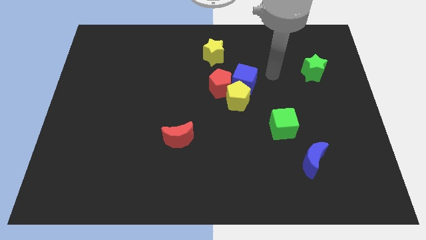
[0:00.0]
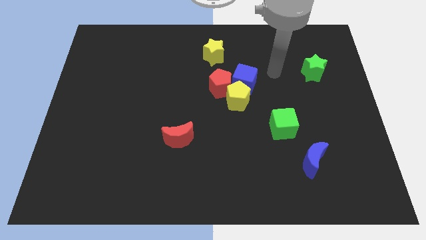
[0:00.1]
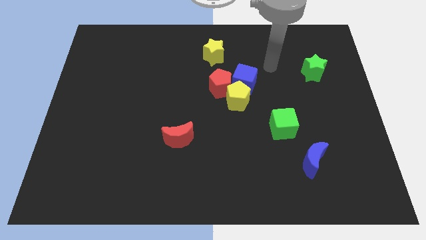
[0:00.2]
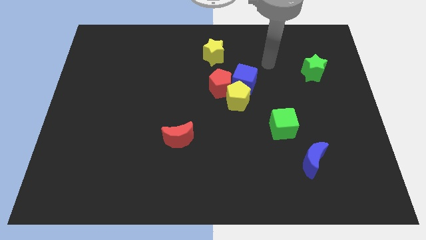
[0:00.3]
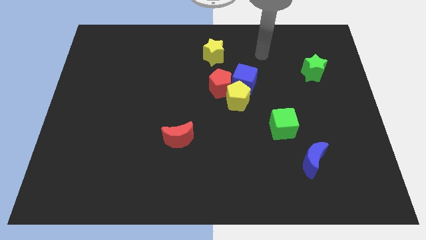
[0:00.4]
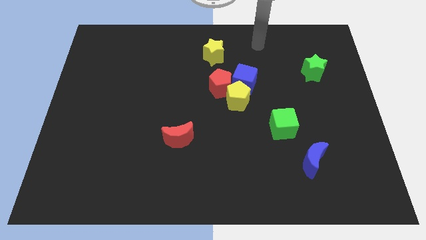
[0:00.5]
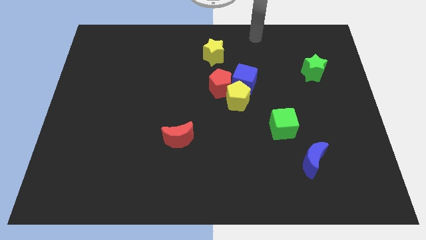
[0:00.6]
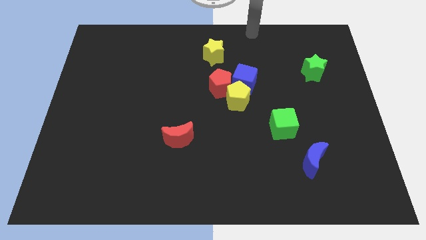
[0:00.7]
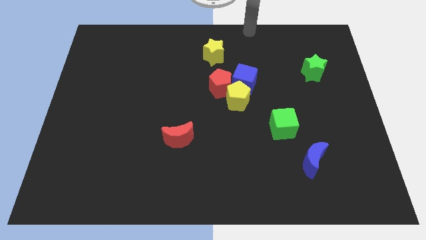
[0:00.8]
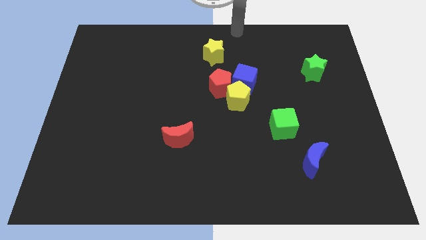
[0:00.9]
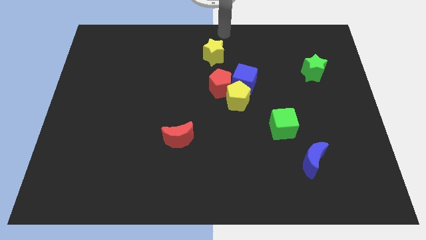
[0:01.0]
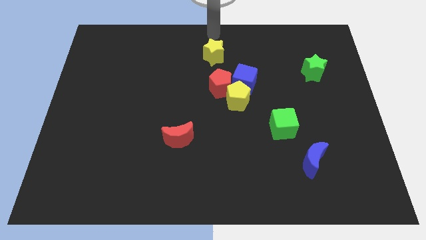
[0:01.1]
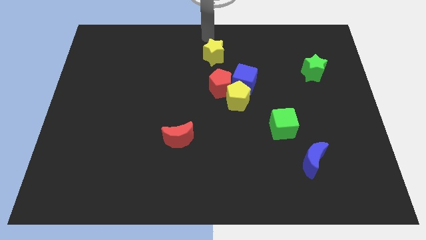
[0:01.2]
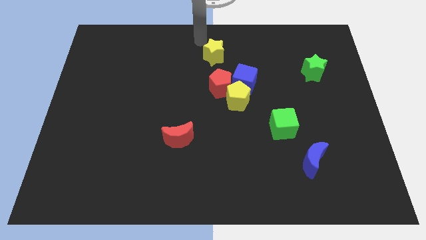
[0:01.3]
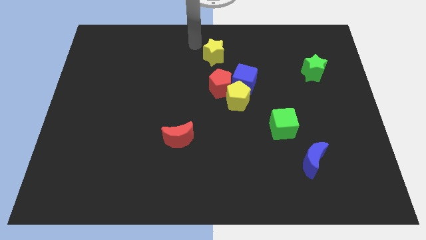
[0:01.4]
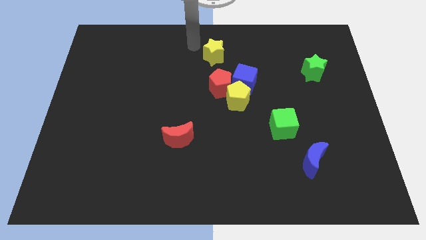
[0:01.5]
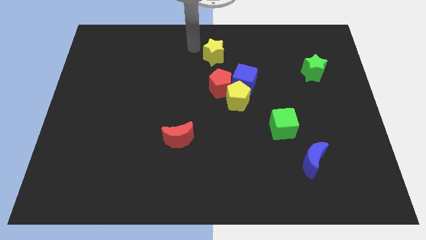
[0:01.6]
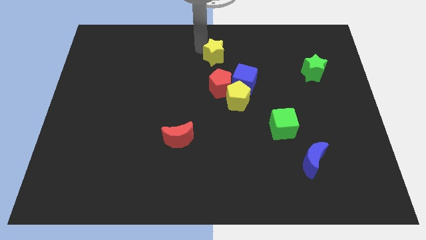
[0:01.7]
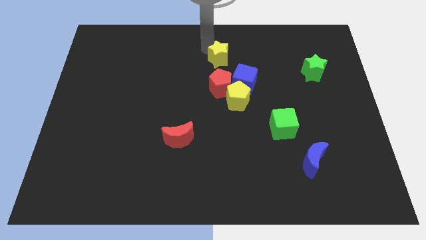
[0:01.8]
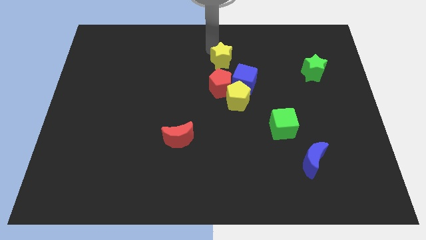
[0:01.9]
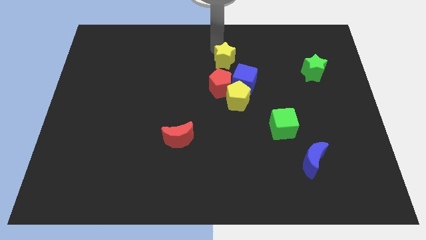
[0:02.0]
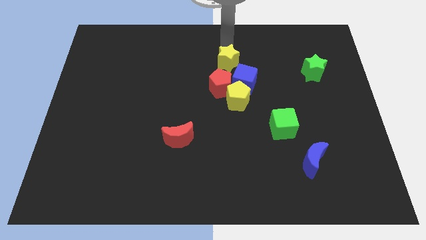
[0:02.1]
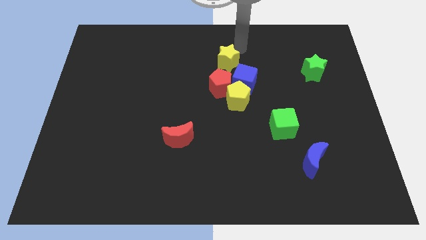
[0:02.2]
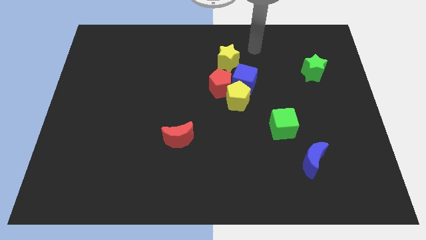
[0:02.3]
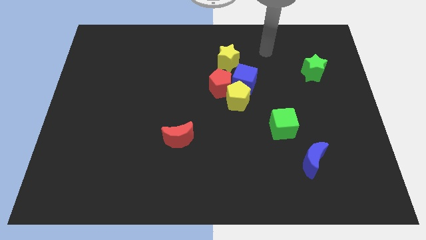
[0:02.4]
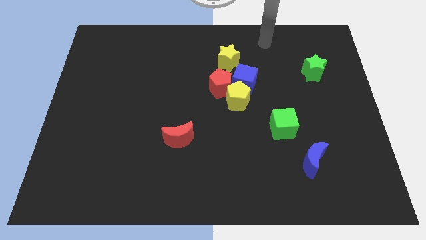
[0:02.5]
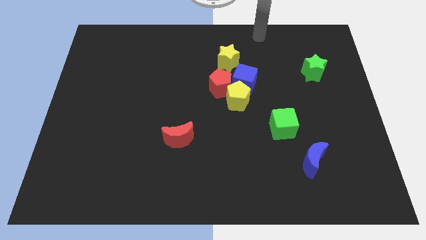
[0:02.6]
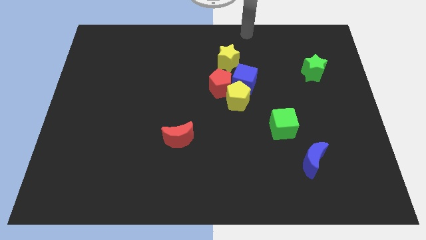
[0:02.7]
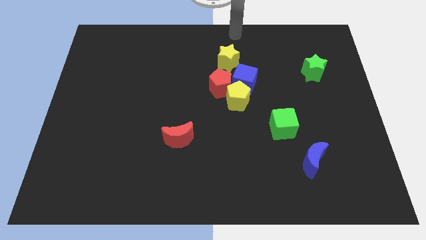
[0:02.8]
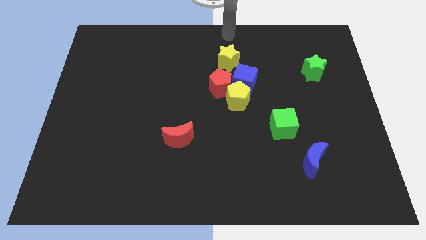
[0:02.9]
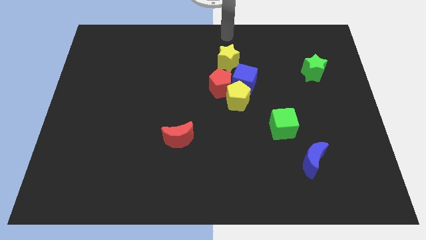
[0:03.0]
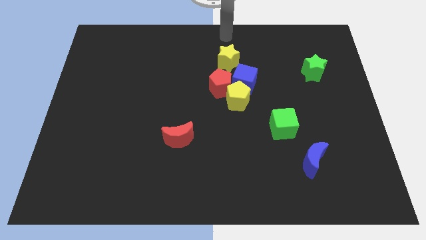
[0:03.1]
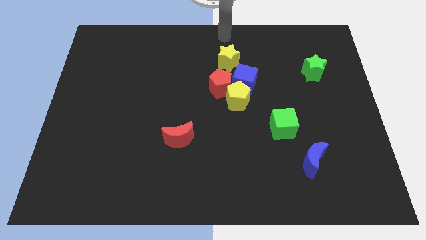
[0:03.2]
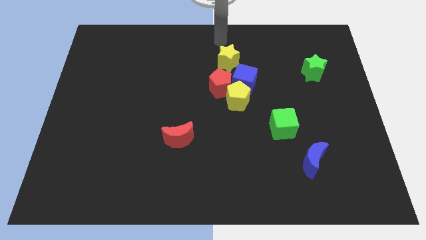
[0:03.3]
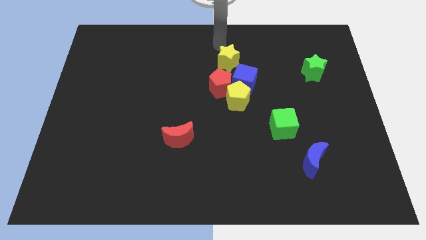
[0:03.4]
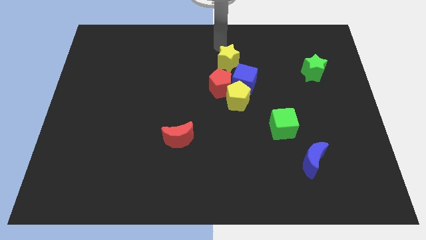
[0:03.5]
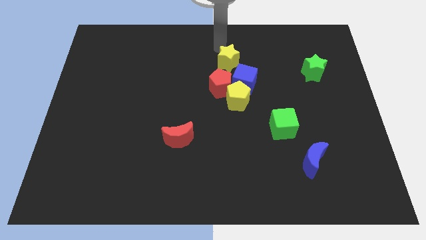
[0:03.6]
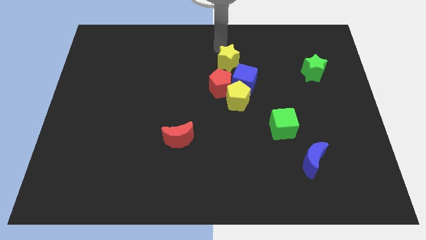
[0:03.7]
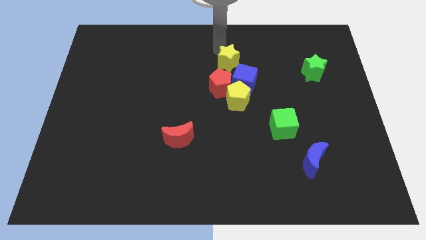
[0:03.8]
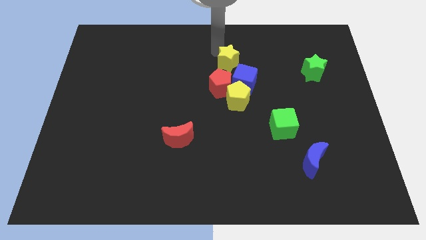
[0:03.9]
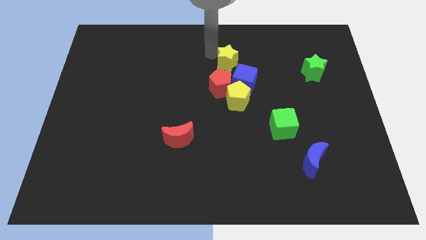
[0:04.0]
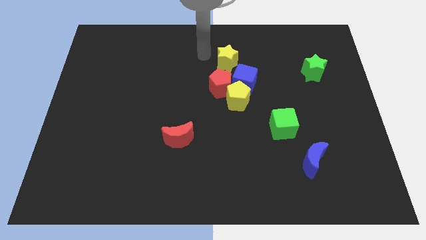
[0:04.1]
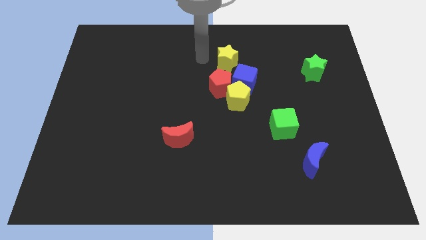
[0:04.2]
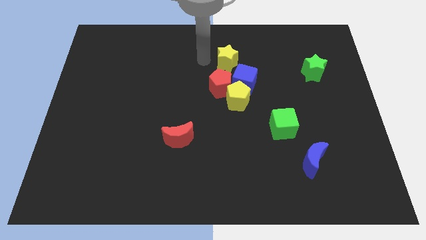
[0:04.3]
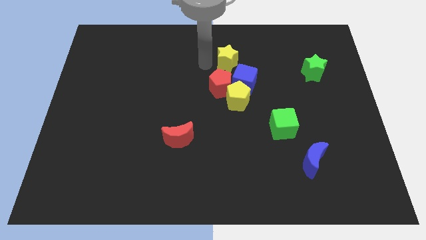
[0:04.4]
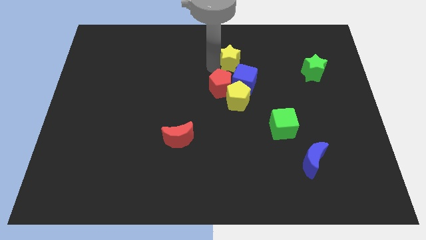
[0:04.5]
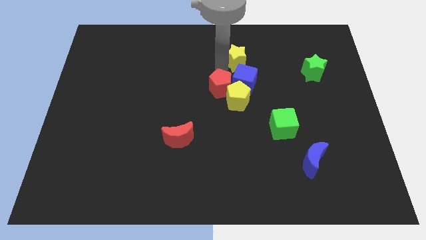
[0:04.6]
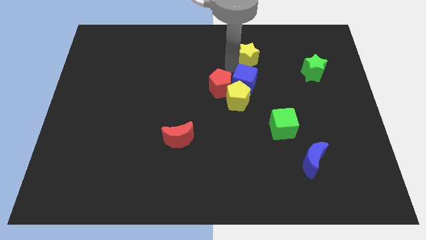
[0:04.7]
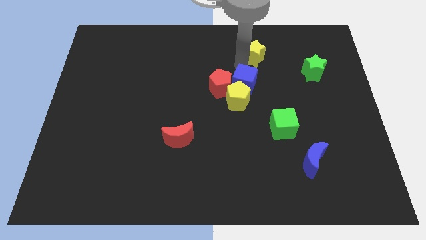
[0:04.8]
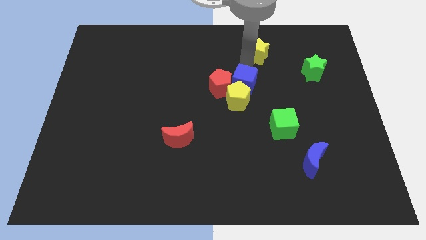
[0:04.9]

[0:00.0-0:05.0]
place the yellow star above the blue cube

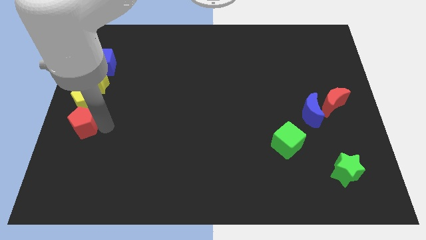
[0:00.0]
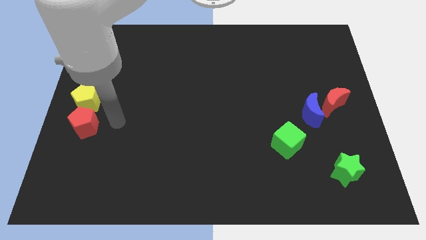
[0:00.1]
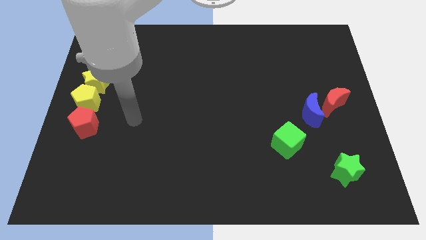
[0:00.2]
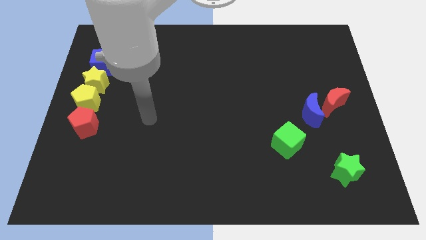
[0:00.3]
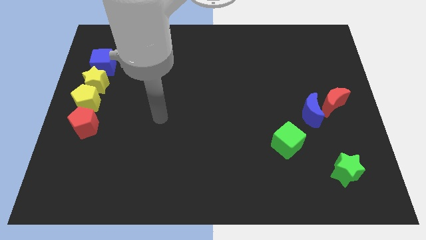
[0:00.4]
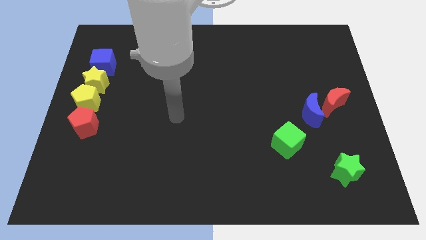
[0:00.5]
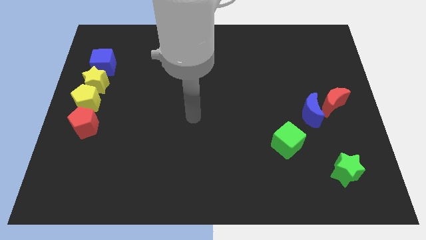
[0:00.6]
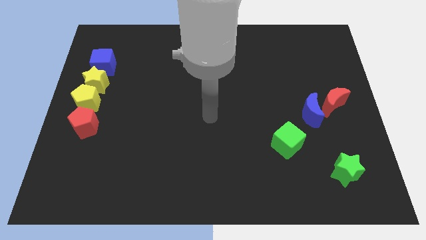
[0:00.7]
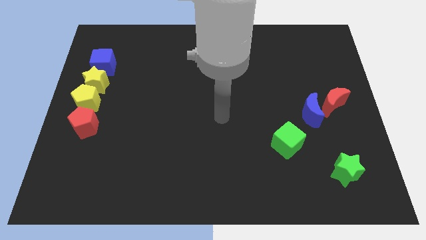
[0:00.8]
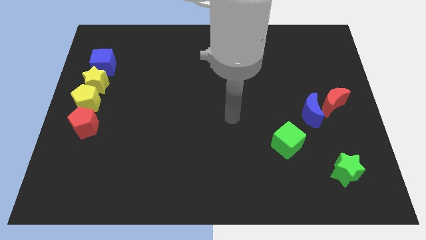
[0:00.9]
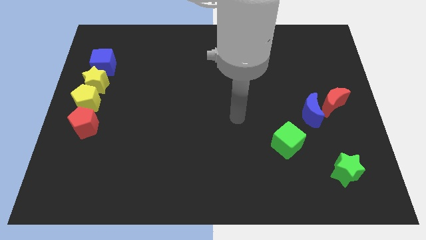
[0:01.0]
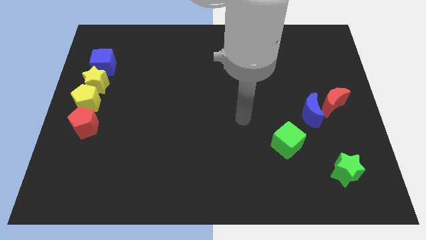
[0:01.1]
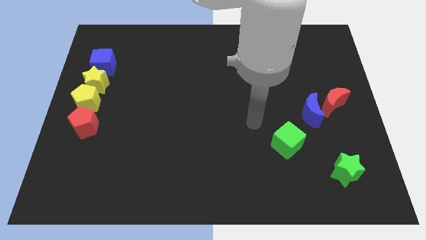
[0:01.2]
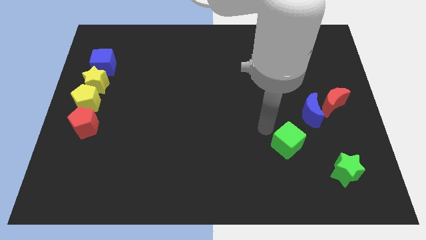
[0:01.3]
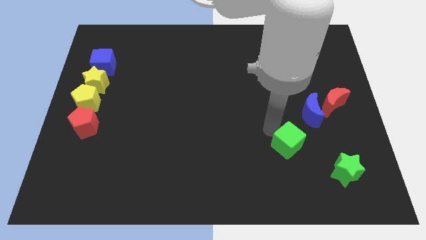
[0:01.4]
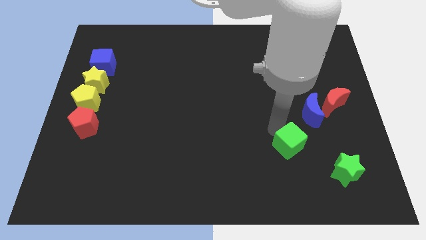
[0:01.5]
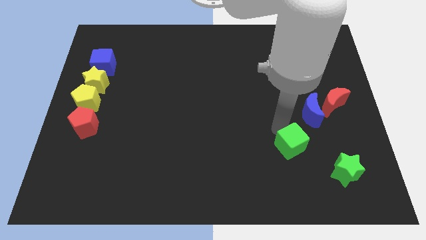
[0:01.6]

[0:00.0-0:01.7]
move your arm away from red pentagon

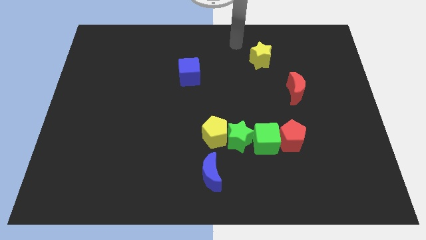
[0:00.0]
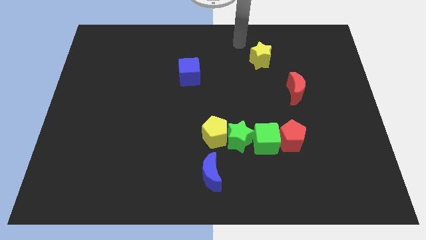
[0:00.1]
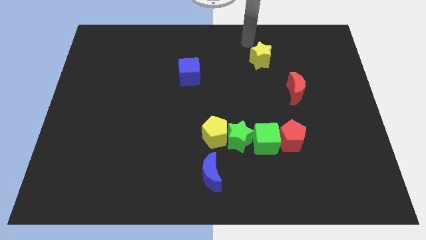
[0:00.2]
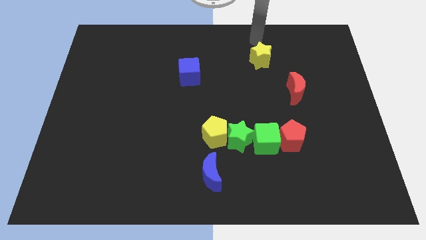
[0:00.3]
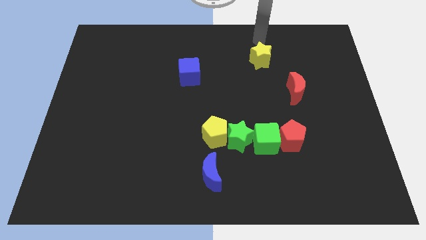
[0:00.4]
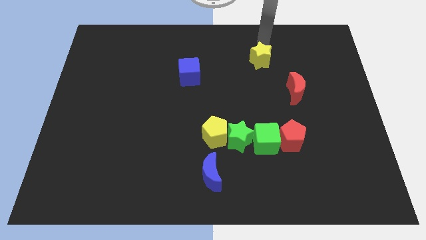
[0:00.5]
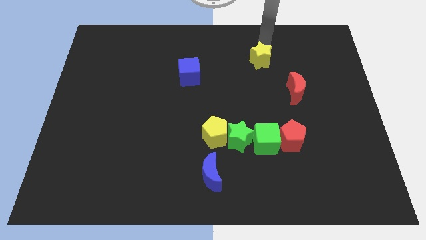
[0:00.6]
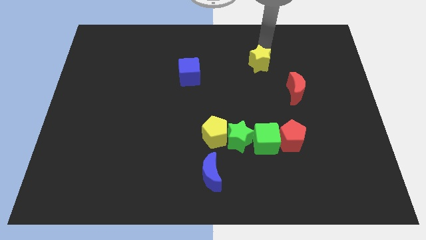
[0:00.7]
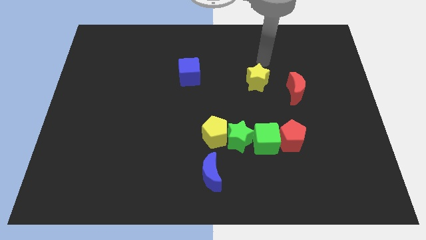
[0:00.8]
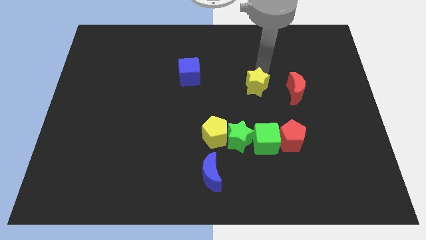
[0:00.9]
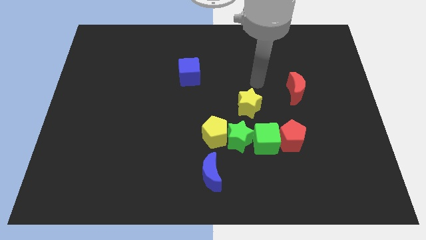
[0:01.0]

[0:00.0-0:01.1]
push the yellow star towards the green star

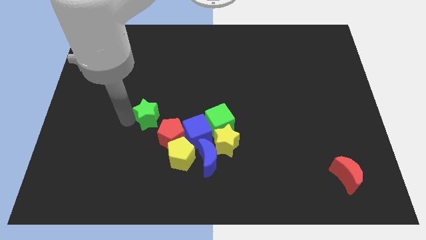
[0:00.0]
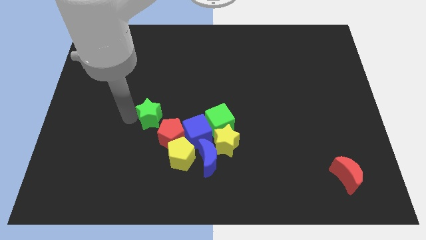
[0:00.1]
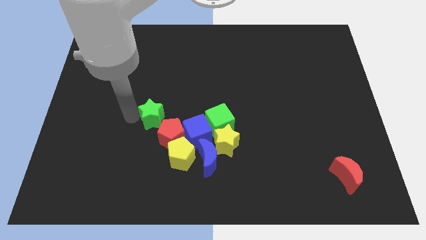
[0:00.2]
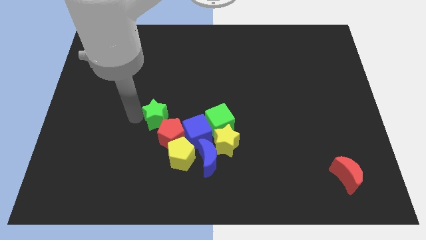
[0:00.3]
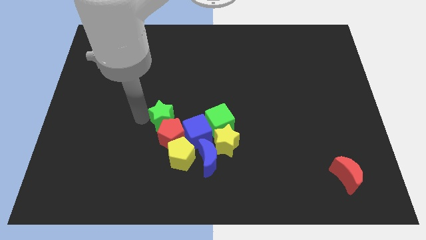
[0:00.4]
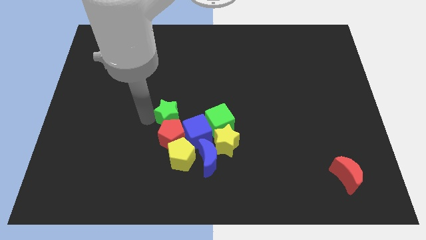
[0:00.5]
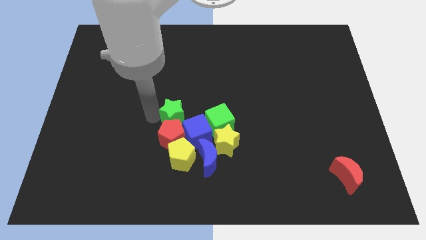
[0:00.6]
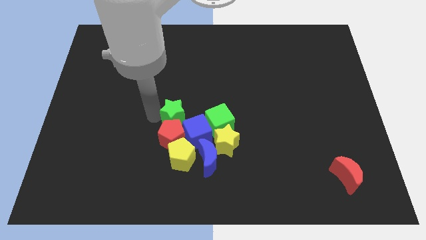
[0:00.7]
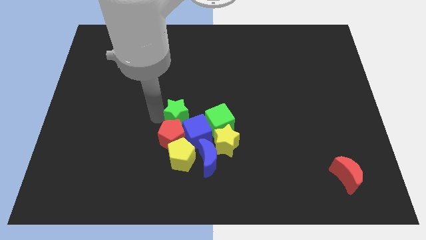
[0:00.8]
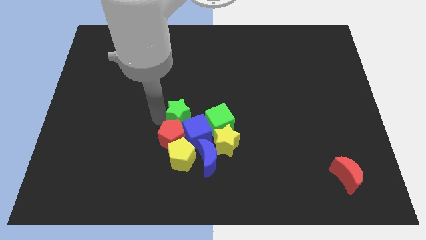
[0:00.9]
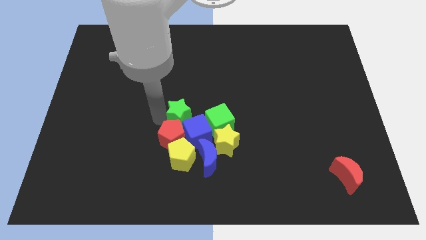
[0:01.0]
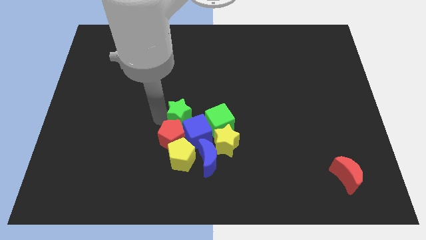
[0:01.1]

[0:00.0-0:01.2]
push the green star into the red pentagon
